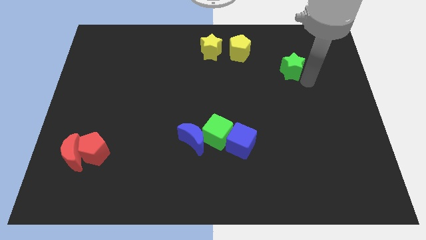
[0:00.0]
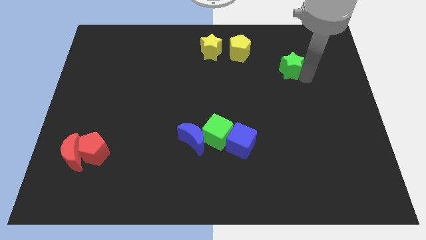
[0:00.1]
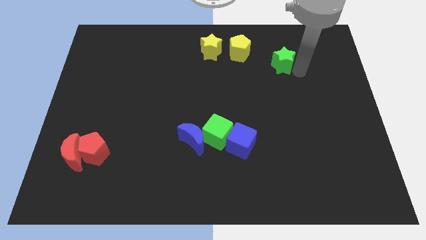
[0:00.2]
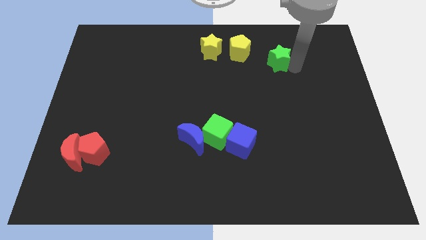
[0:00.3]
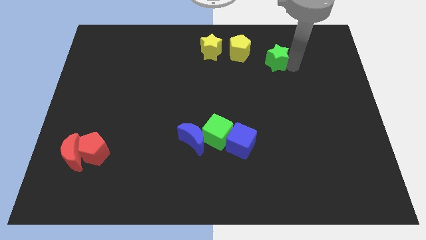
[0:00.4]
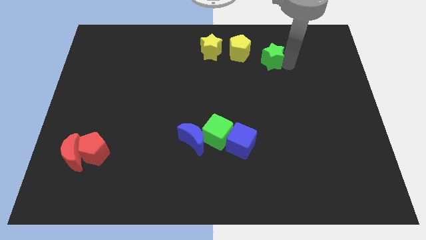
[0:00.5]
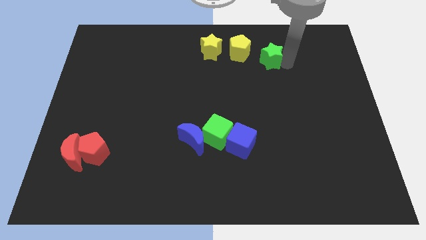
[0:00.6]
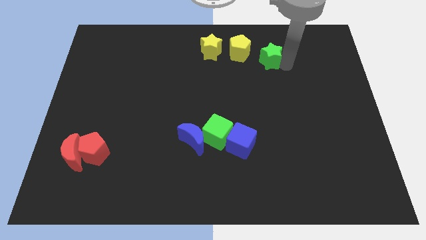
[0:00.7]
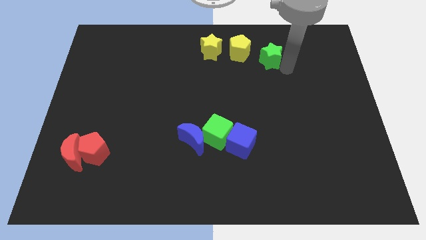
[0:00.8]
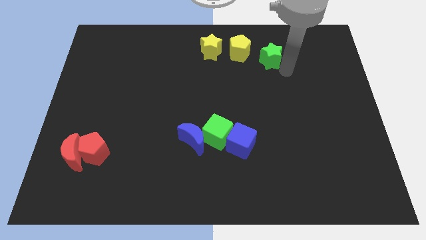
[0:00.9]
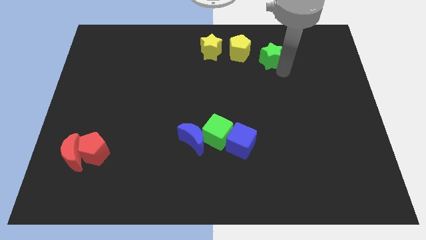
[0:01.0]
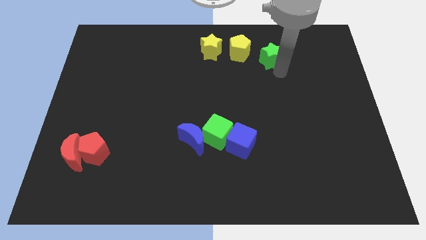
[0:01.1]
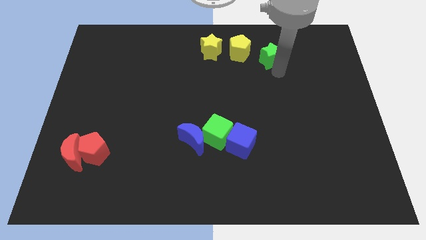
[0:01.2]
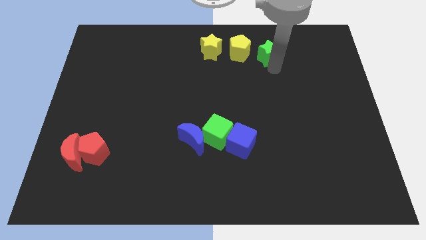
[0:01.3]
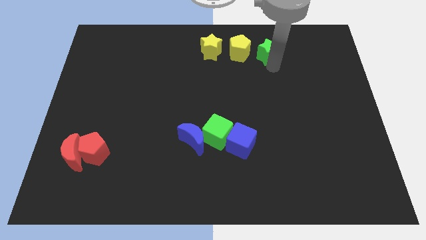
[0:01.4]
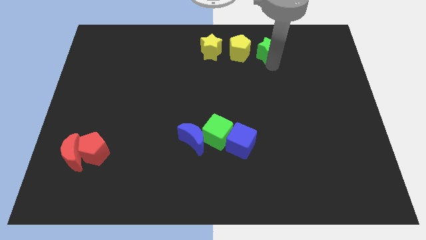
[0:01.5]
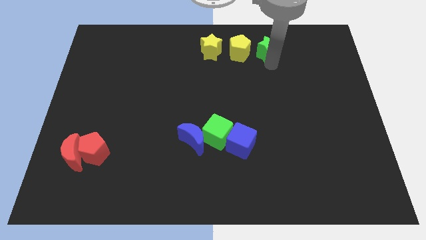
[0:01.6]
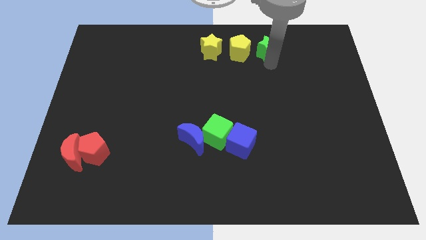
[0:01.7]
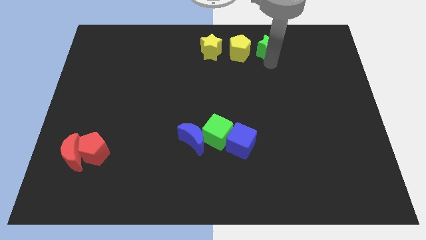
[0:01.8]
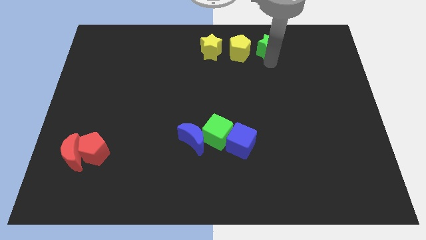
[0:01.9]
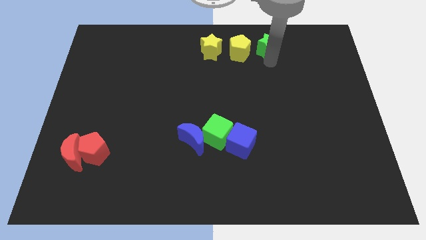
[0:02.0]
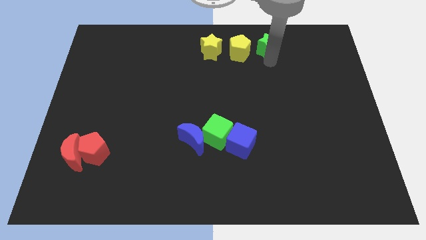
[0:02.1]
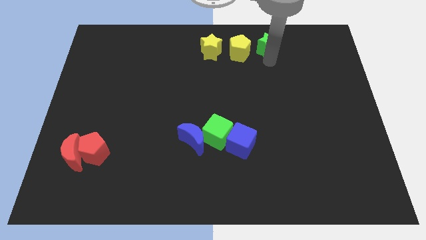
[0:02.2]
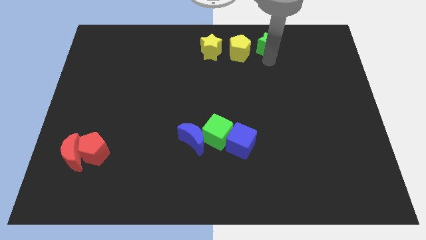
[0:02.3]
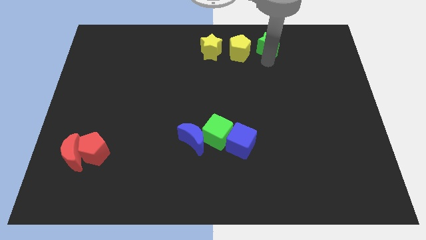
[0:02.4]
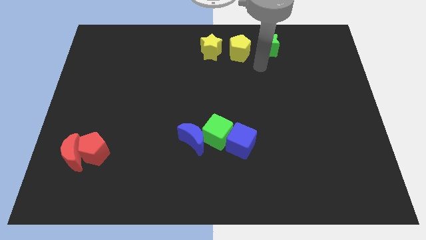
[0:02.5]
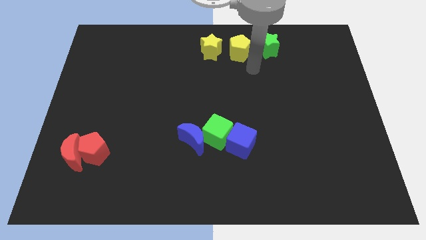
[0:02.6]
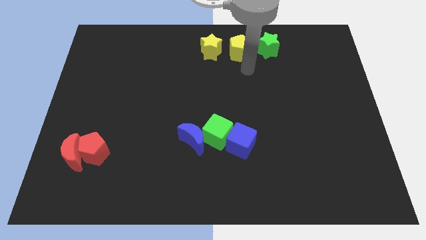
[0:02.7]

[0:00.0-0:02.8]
push the green star to the right of the yellow pentagon

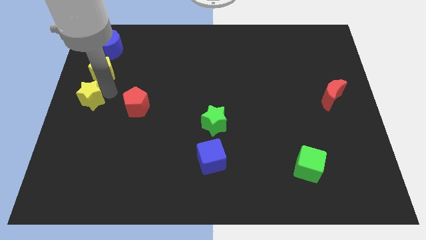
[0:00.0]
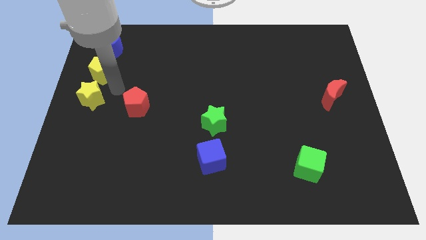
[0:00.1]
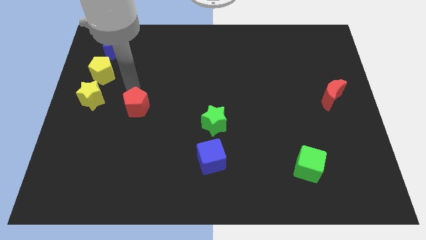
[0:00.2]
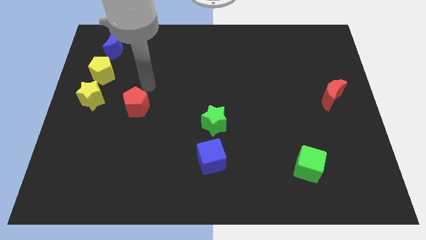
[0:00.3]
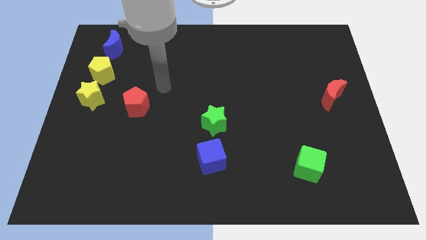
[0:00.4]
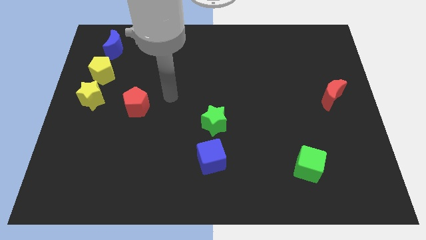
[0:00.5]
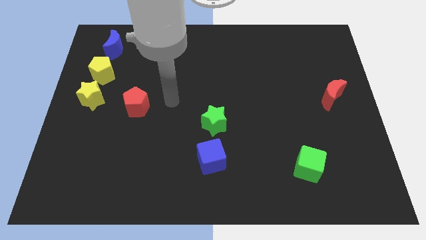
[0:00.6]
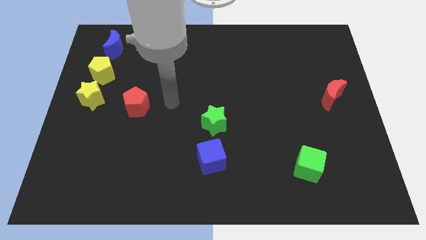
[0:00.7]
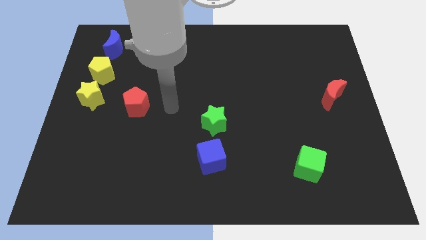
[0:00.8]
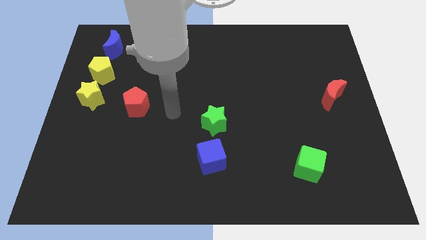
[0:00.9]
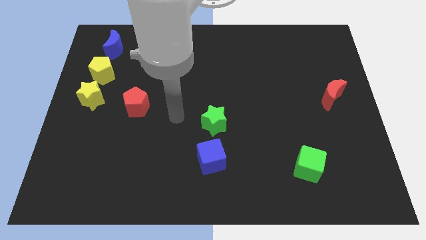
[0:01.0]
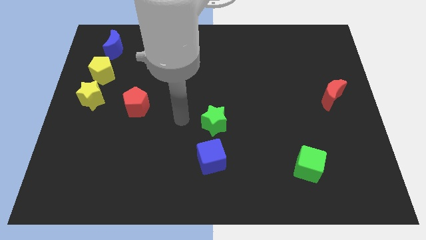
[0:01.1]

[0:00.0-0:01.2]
point your arm to the left side of green star

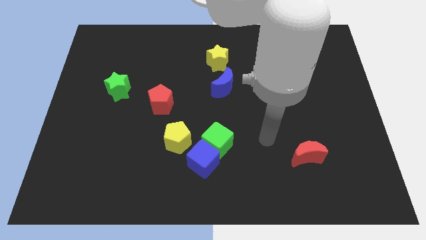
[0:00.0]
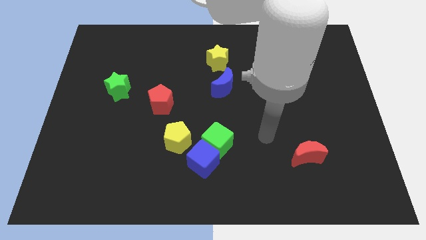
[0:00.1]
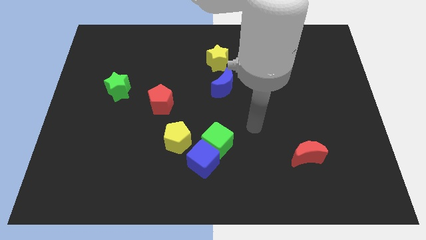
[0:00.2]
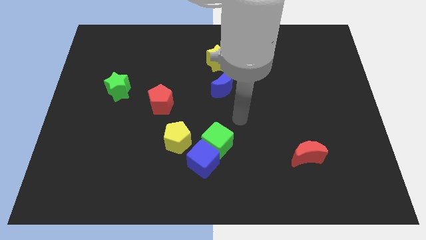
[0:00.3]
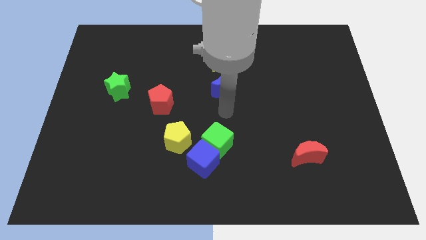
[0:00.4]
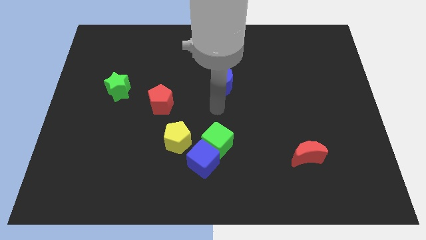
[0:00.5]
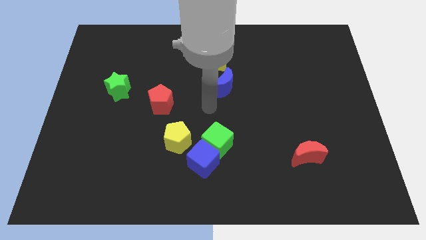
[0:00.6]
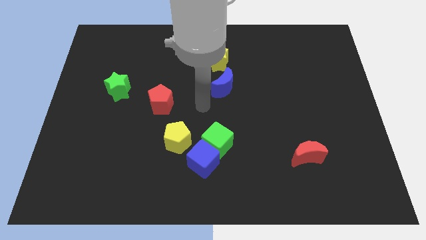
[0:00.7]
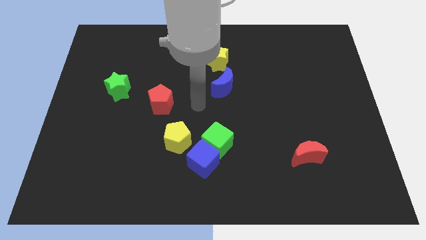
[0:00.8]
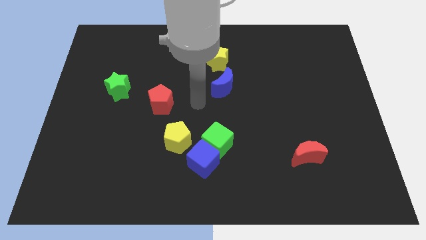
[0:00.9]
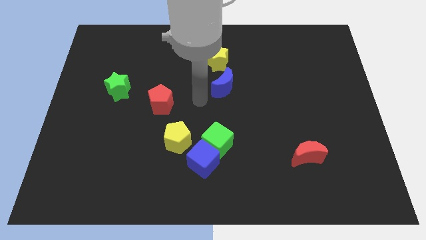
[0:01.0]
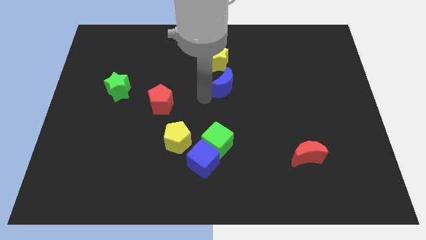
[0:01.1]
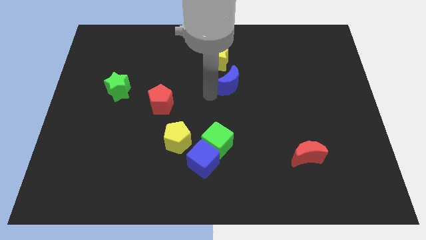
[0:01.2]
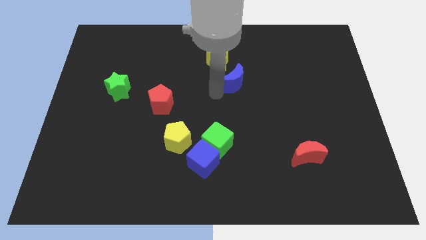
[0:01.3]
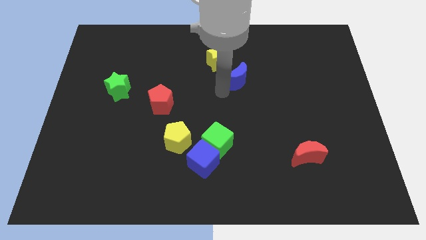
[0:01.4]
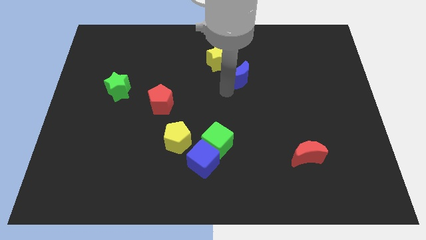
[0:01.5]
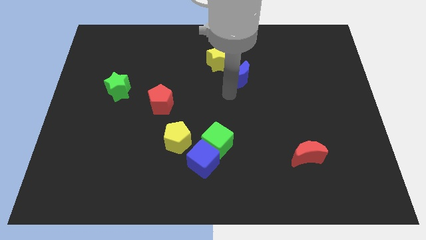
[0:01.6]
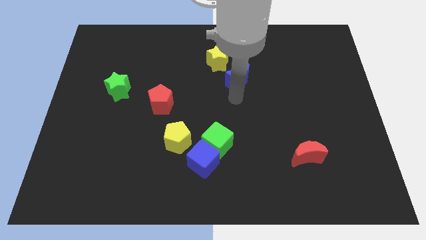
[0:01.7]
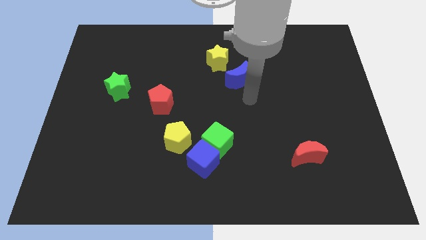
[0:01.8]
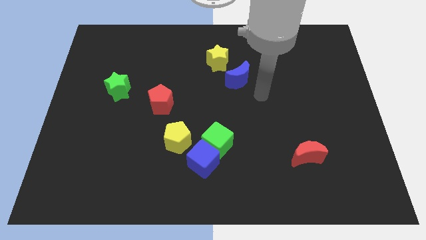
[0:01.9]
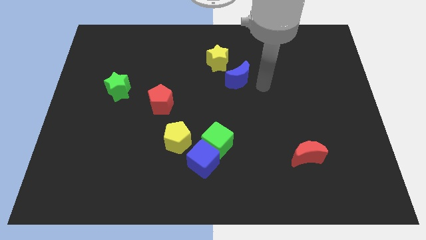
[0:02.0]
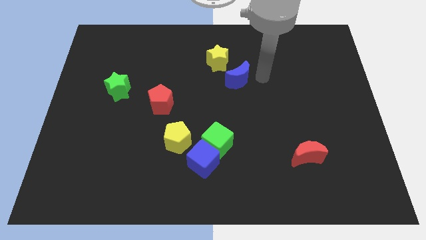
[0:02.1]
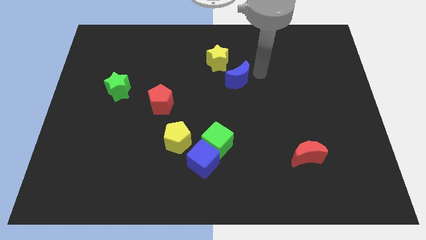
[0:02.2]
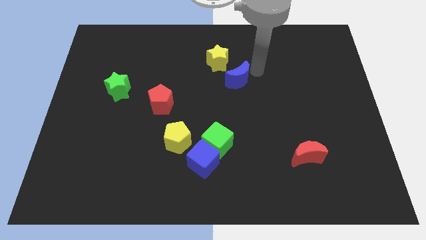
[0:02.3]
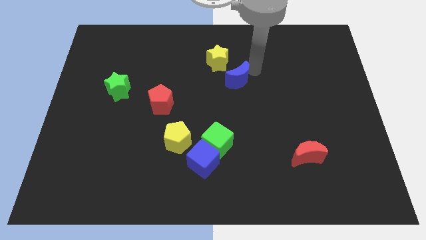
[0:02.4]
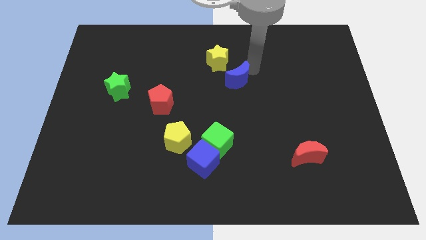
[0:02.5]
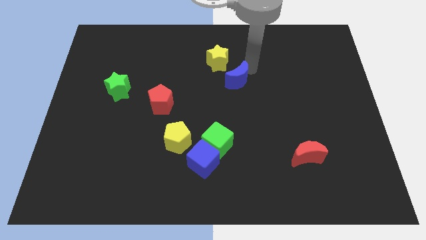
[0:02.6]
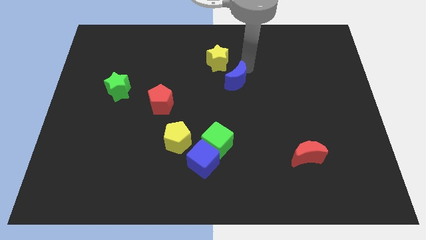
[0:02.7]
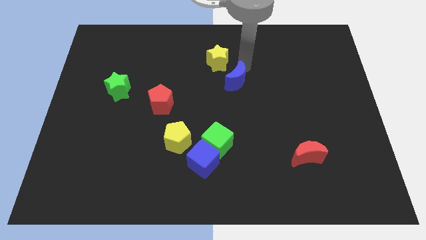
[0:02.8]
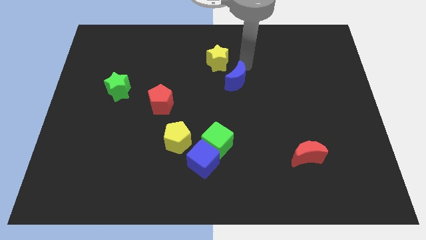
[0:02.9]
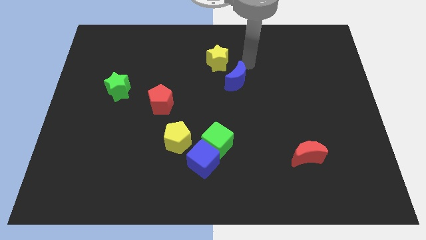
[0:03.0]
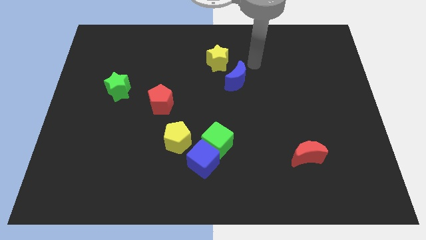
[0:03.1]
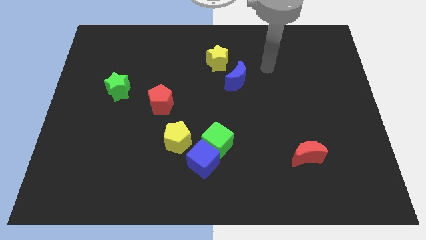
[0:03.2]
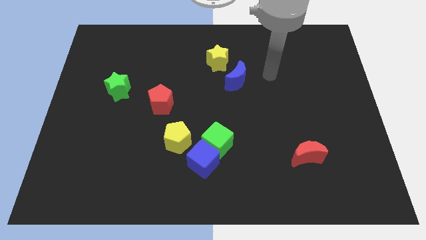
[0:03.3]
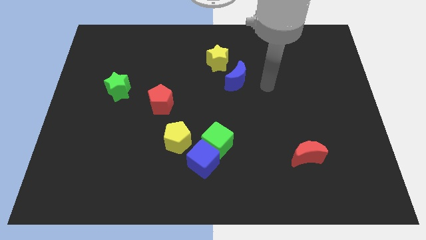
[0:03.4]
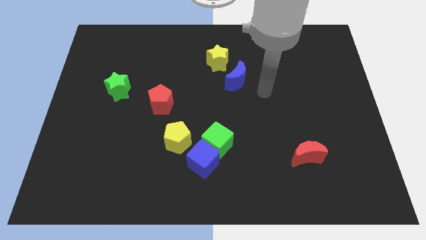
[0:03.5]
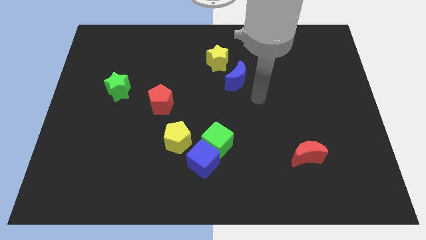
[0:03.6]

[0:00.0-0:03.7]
slightly push the blue moon upwards

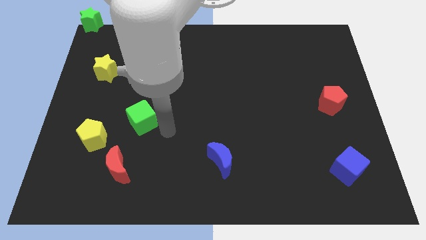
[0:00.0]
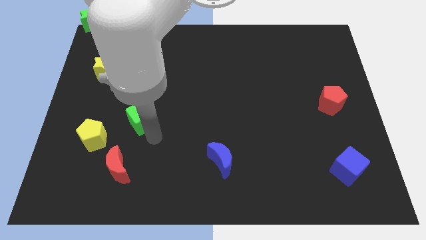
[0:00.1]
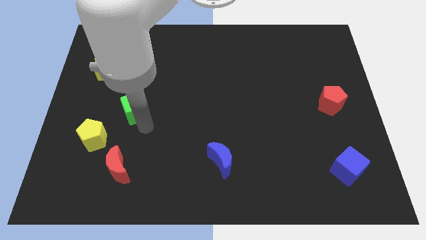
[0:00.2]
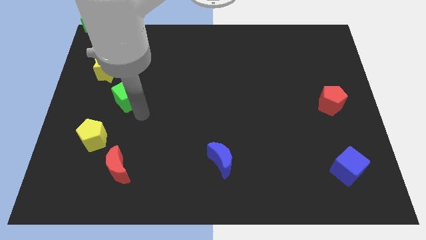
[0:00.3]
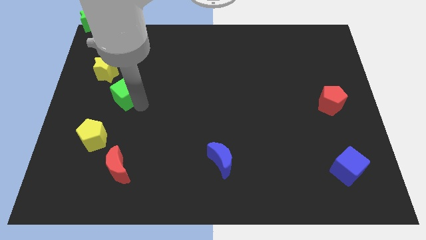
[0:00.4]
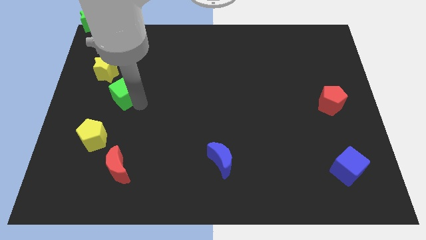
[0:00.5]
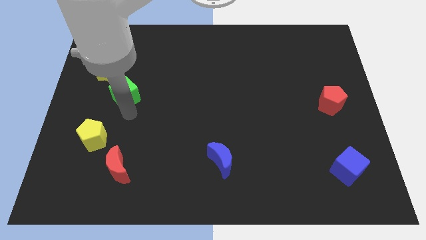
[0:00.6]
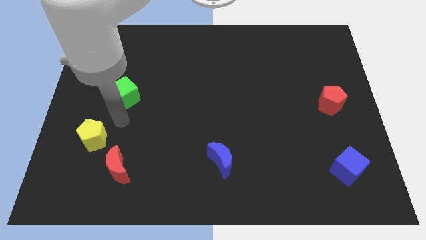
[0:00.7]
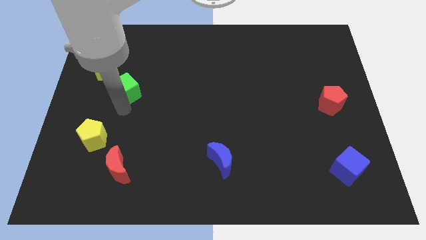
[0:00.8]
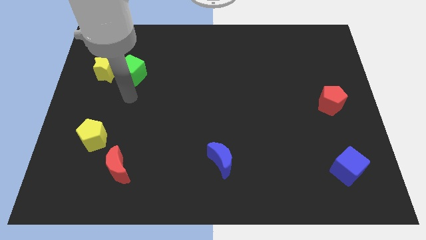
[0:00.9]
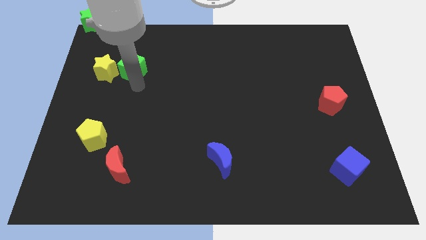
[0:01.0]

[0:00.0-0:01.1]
move the green cube to the right of the yellow star

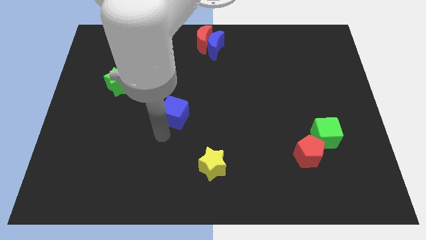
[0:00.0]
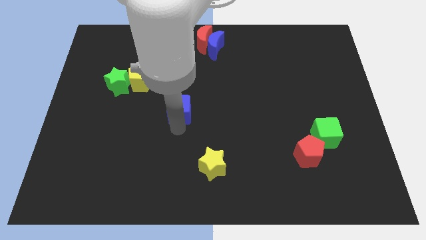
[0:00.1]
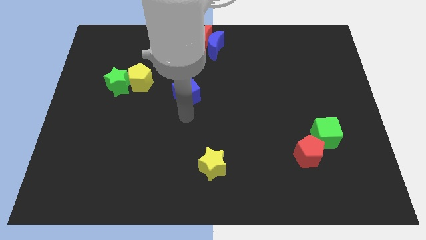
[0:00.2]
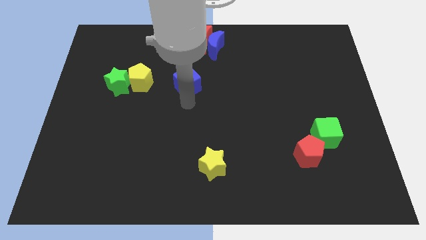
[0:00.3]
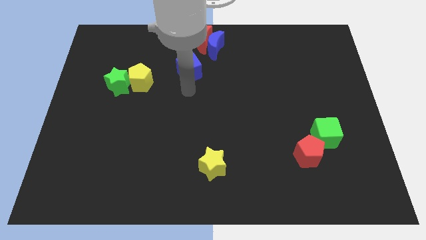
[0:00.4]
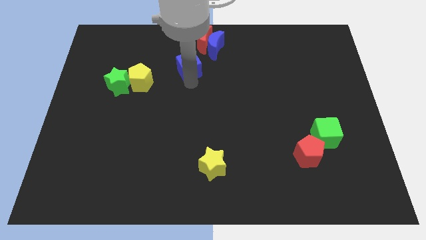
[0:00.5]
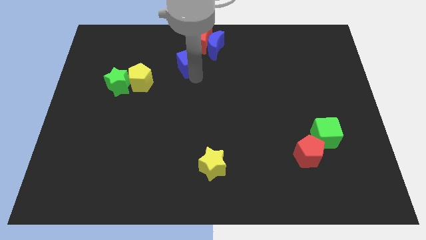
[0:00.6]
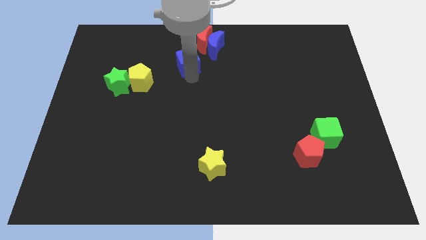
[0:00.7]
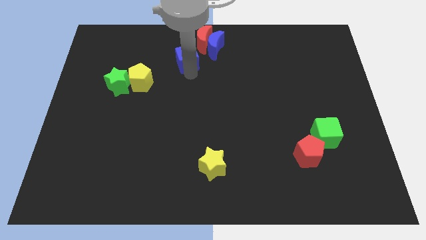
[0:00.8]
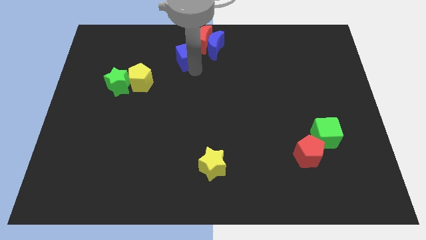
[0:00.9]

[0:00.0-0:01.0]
push the blue cube close to the red moon
